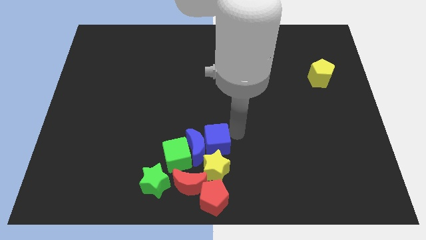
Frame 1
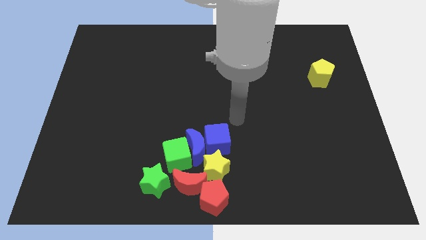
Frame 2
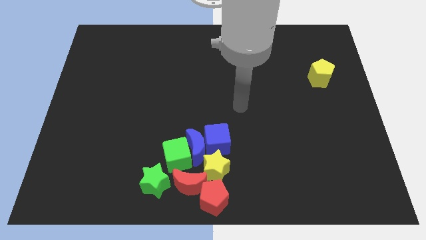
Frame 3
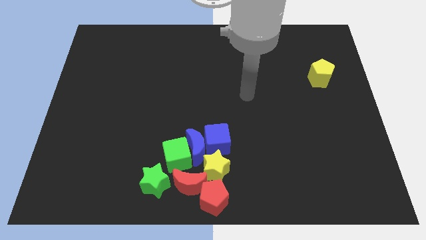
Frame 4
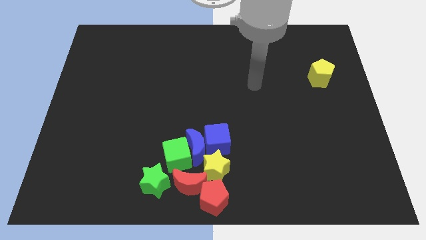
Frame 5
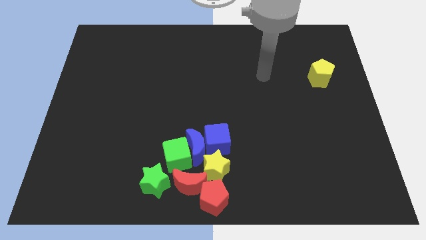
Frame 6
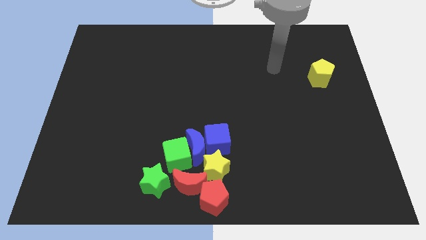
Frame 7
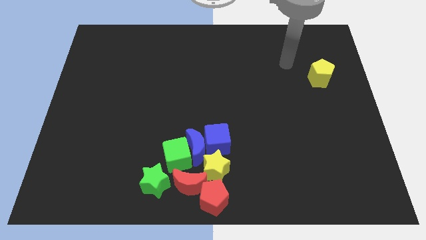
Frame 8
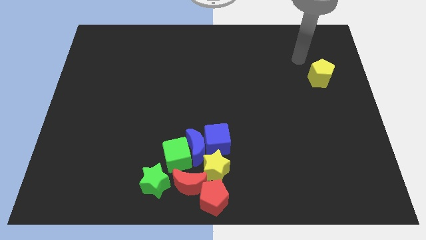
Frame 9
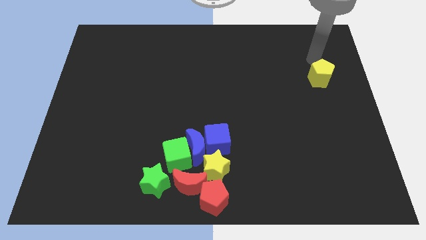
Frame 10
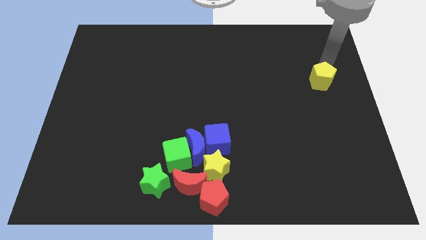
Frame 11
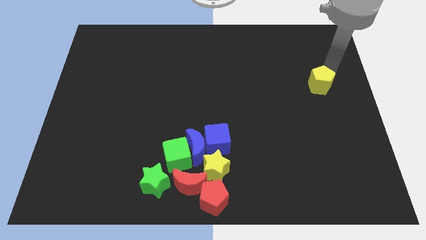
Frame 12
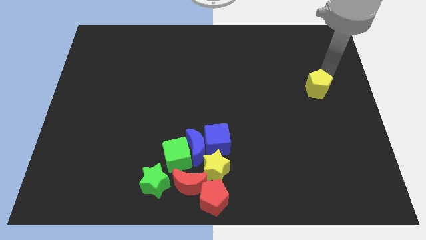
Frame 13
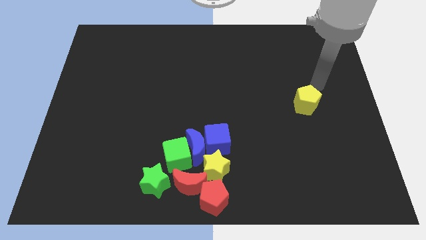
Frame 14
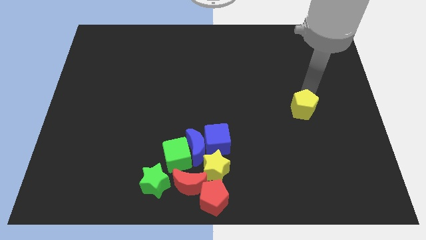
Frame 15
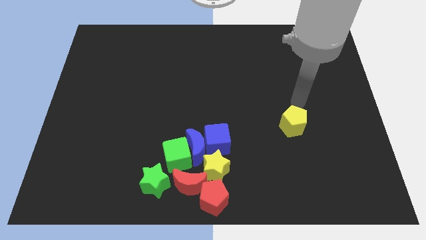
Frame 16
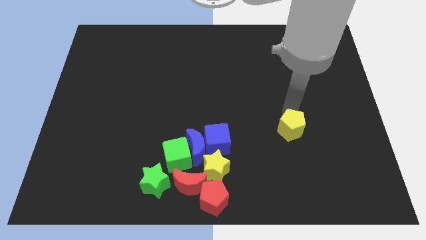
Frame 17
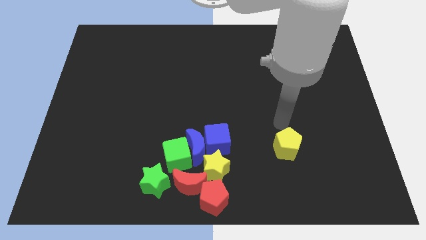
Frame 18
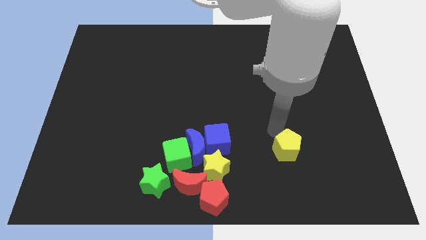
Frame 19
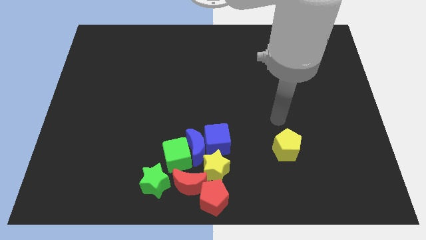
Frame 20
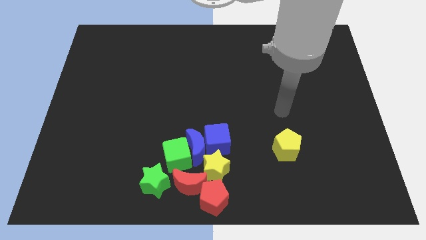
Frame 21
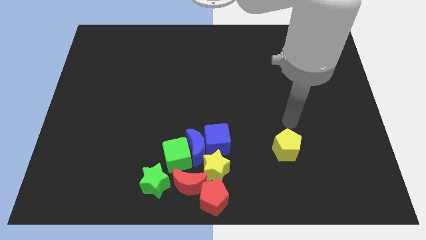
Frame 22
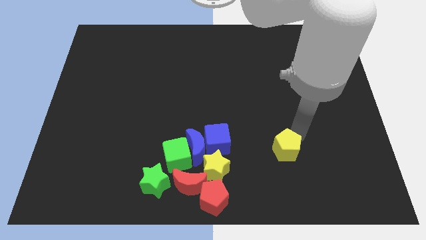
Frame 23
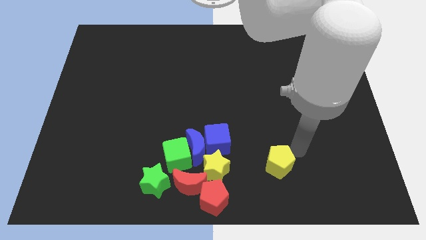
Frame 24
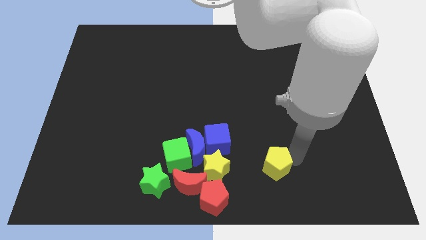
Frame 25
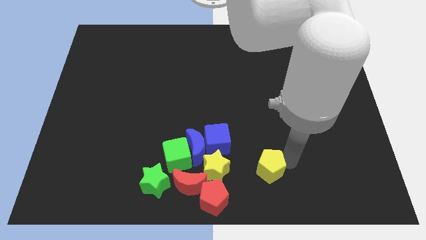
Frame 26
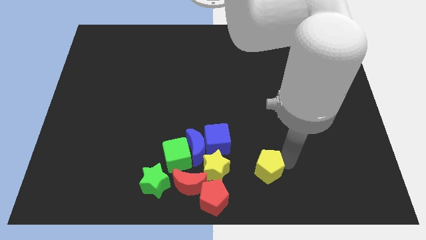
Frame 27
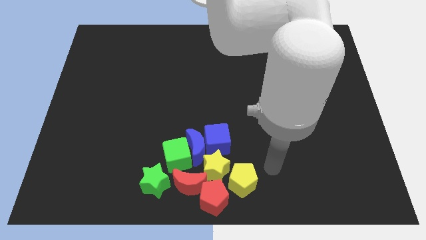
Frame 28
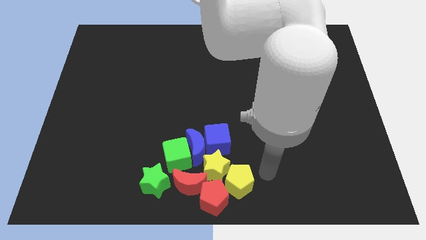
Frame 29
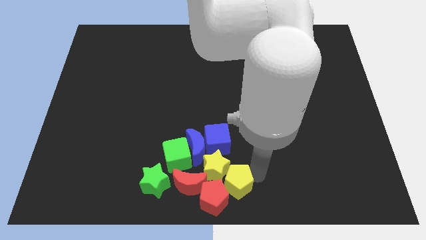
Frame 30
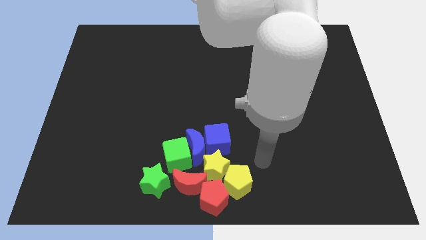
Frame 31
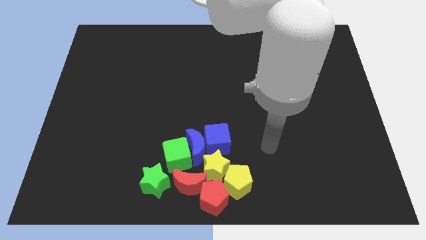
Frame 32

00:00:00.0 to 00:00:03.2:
push the yellow pentagon to the right of the red pentagon to the bottom center of the board

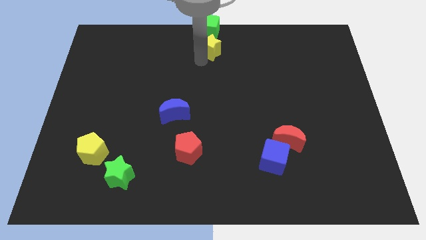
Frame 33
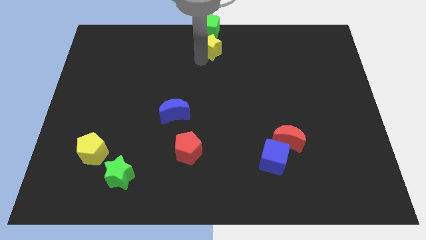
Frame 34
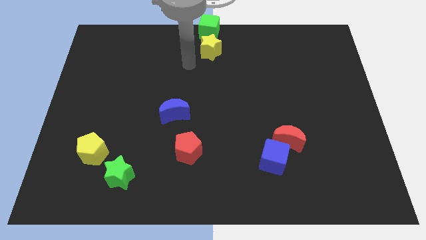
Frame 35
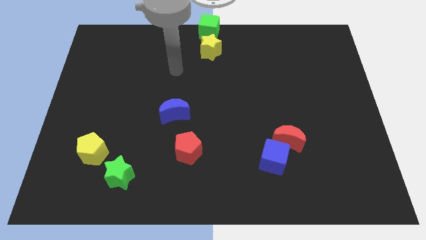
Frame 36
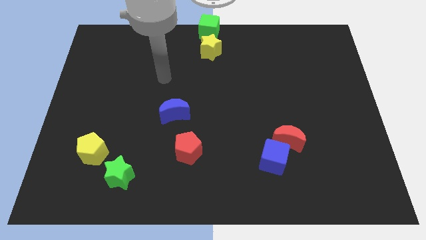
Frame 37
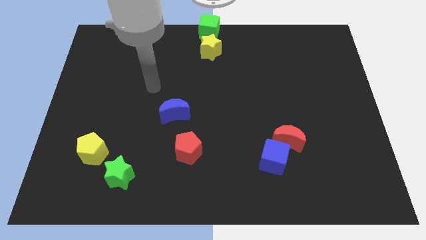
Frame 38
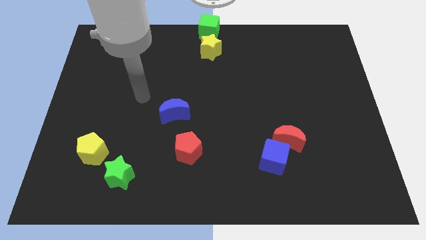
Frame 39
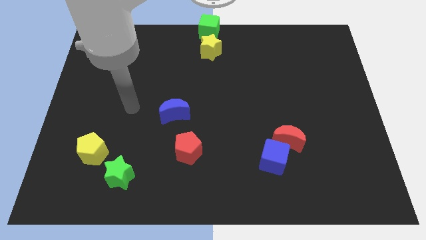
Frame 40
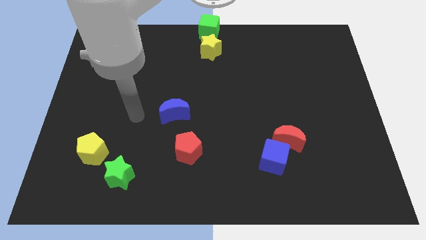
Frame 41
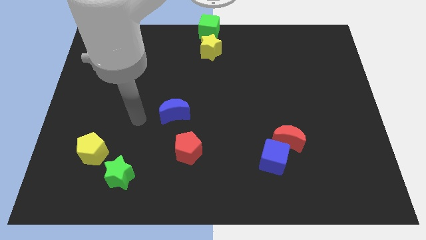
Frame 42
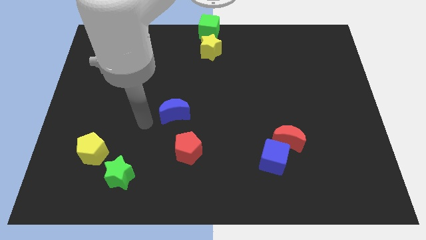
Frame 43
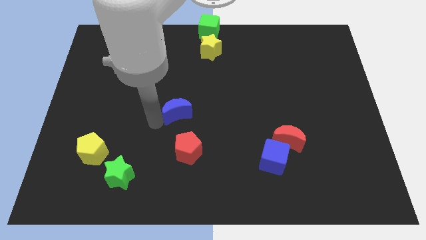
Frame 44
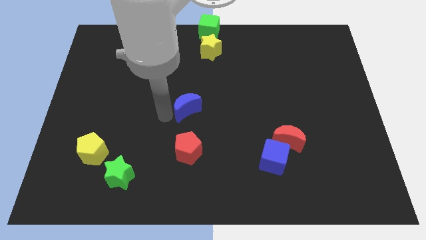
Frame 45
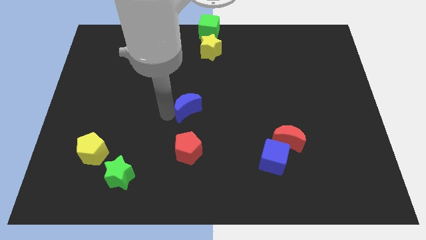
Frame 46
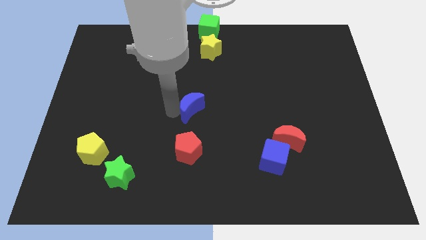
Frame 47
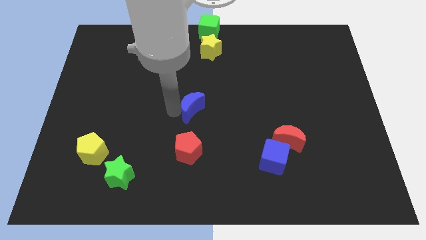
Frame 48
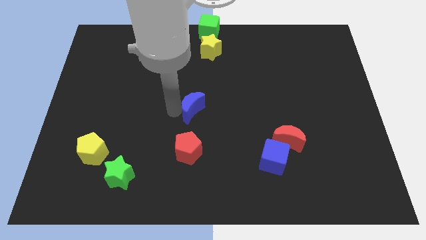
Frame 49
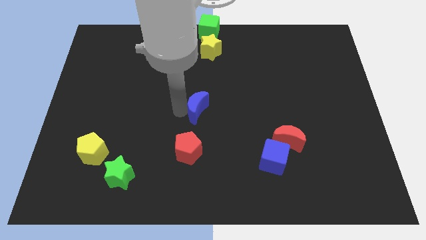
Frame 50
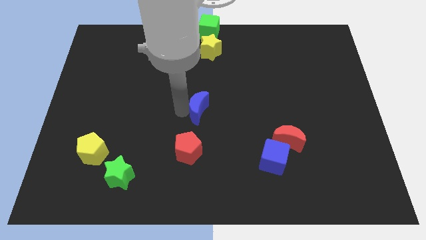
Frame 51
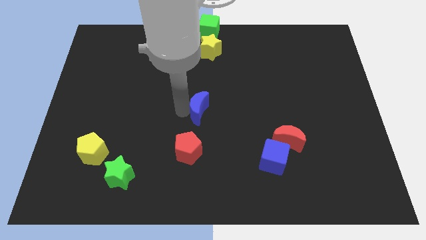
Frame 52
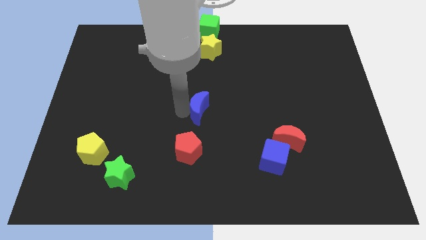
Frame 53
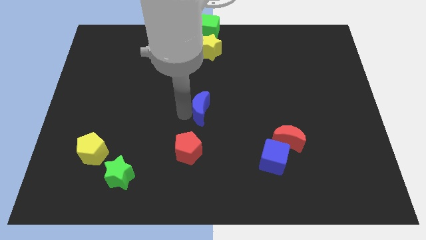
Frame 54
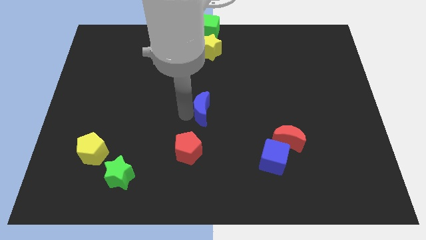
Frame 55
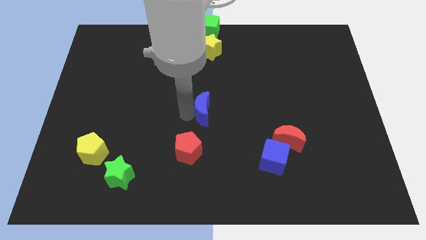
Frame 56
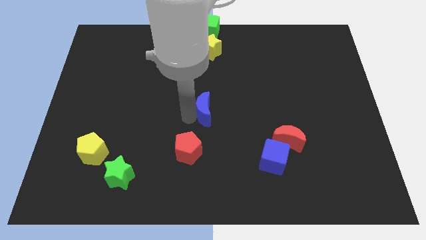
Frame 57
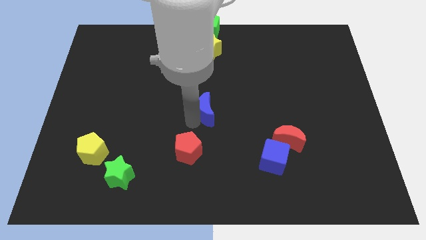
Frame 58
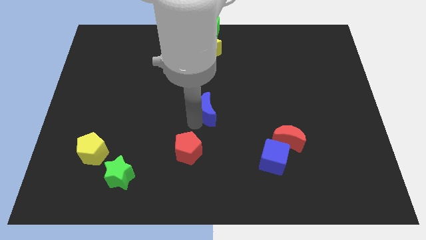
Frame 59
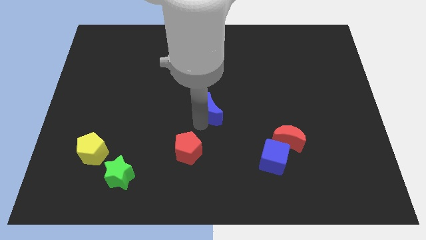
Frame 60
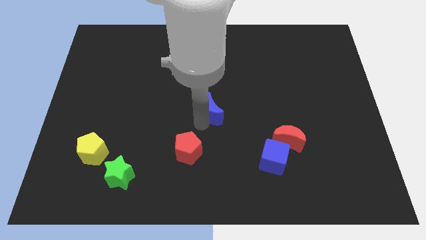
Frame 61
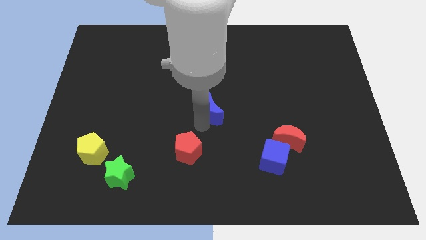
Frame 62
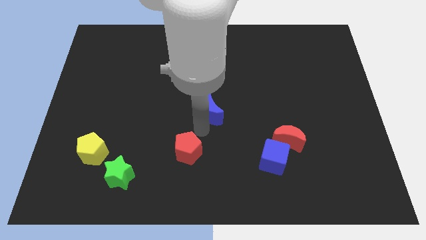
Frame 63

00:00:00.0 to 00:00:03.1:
place the blue moon at the center of the board

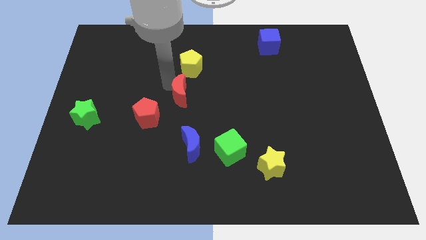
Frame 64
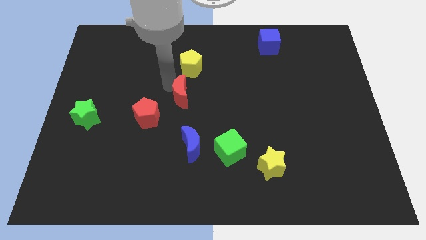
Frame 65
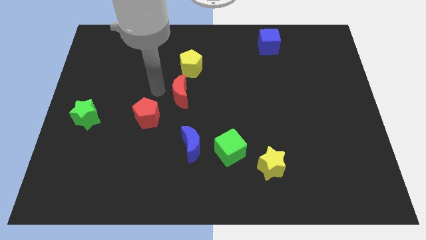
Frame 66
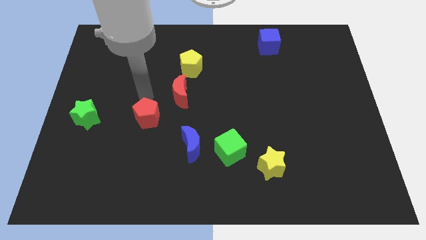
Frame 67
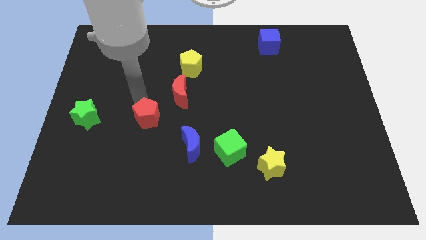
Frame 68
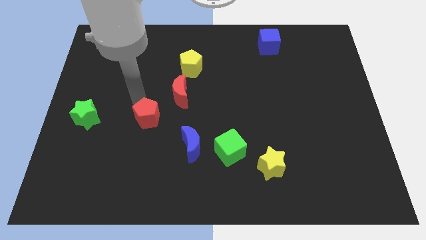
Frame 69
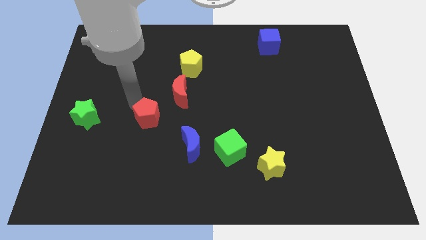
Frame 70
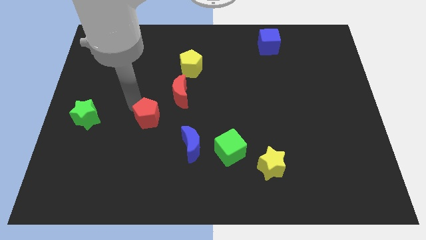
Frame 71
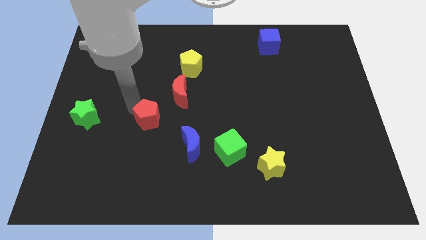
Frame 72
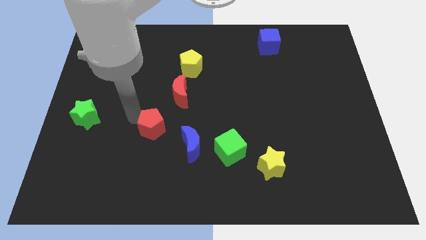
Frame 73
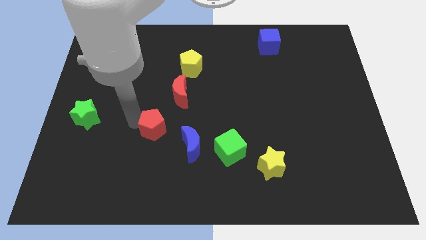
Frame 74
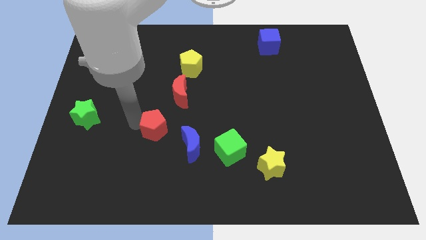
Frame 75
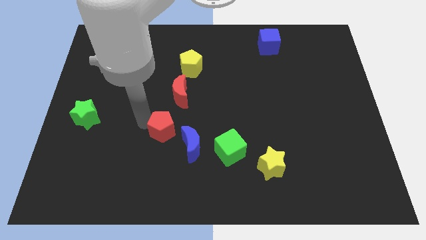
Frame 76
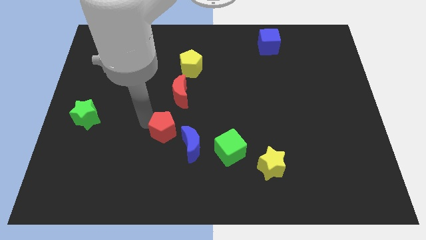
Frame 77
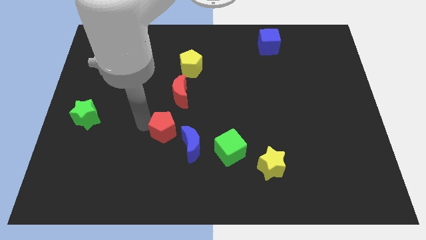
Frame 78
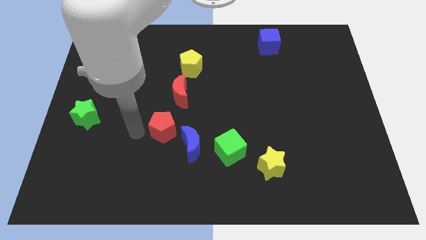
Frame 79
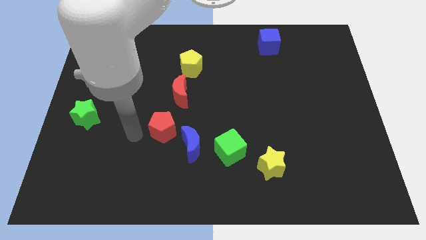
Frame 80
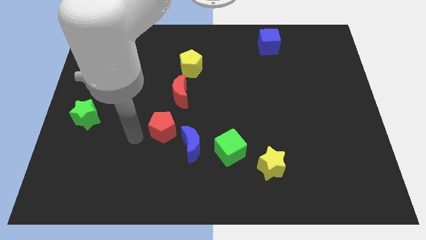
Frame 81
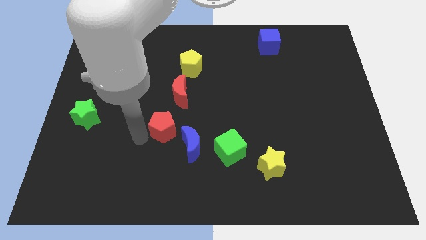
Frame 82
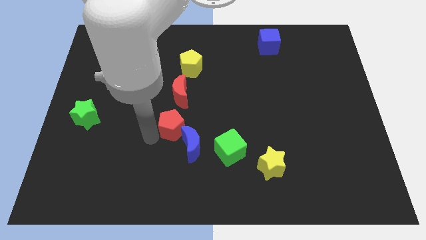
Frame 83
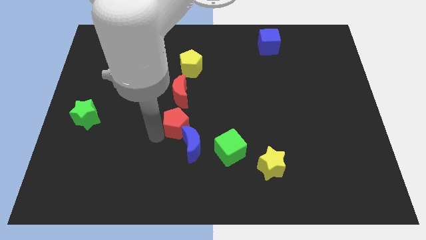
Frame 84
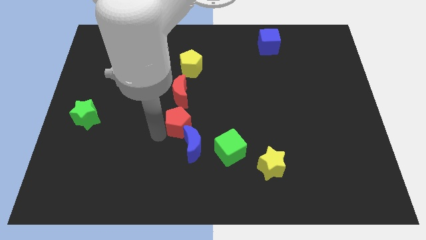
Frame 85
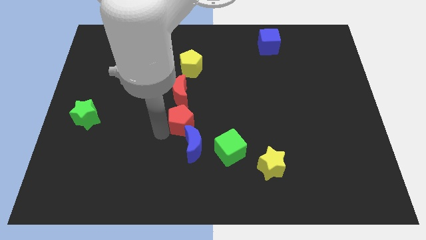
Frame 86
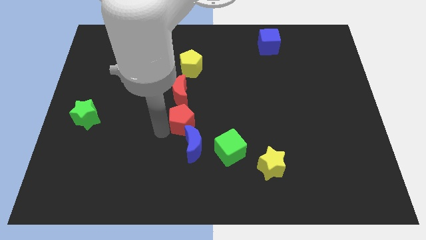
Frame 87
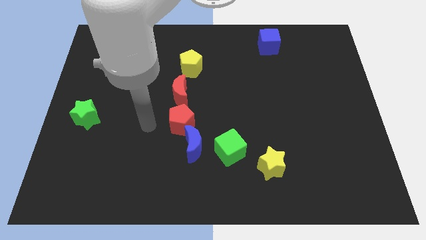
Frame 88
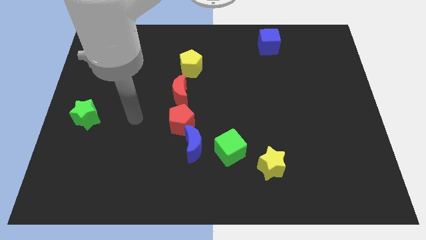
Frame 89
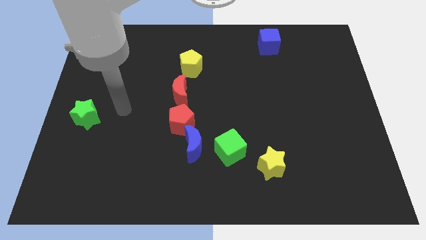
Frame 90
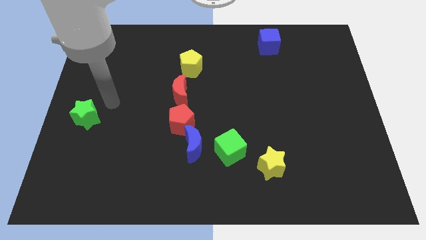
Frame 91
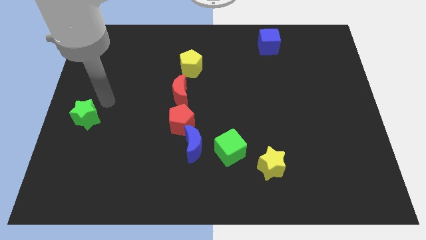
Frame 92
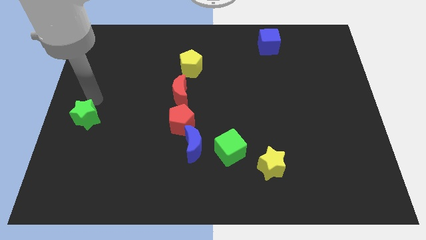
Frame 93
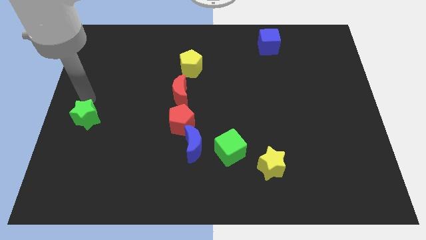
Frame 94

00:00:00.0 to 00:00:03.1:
place red pentgon to the bottom of red moon
